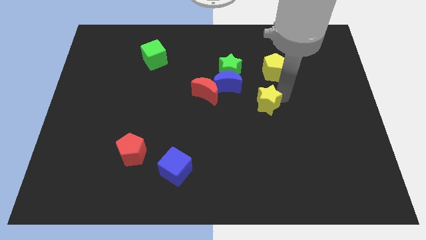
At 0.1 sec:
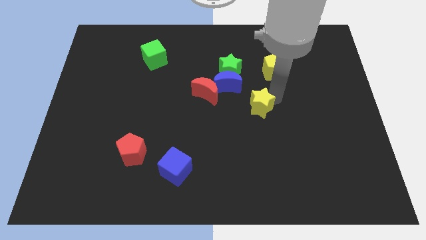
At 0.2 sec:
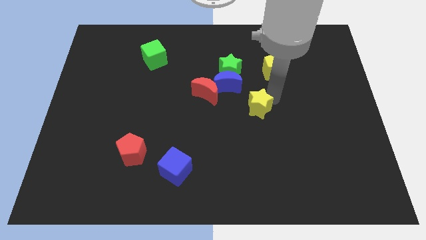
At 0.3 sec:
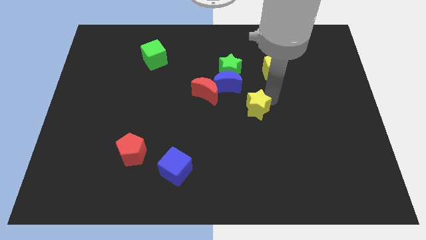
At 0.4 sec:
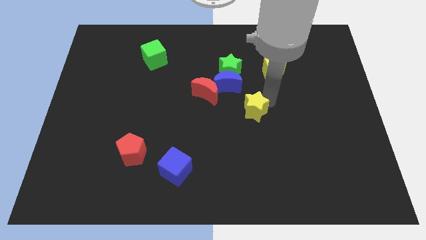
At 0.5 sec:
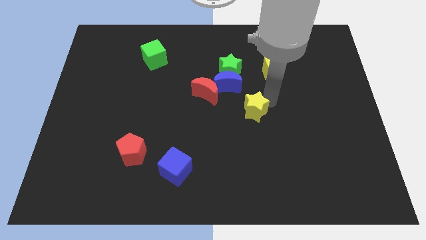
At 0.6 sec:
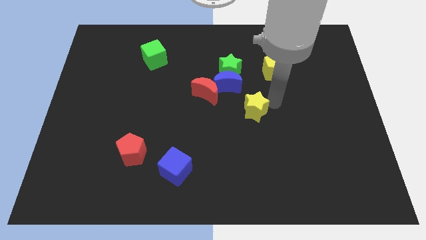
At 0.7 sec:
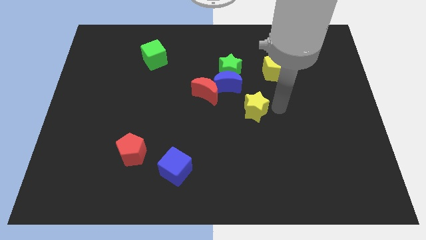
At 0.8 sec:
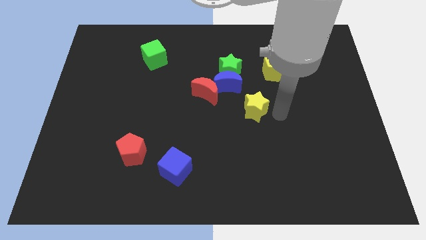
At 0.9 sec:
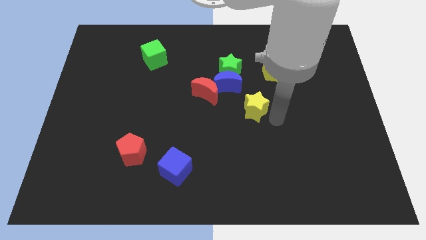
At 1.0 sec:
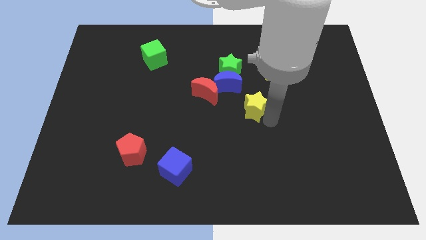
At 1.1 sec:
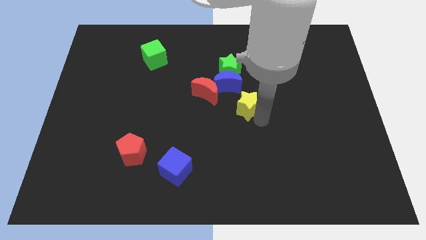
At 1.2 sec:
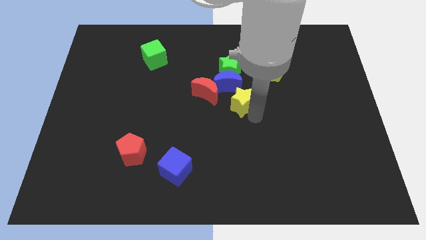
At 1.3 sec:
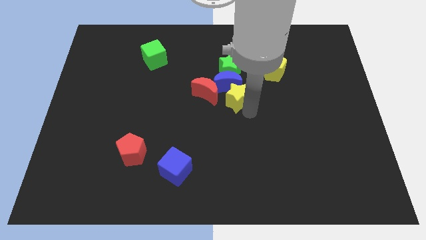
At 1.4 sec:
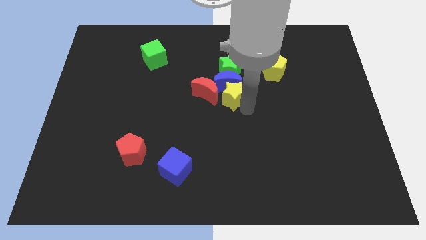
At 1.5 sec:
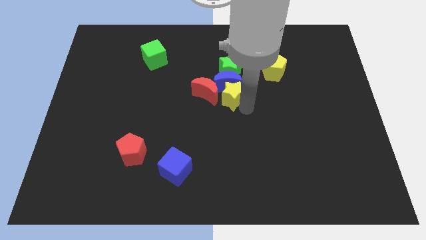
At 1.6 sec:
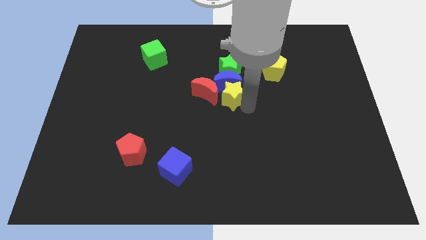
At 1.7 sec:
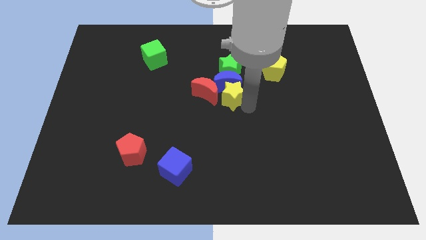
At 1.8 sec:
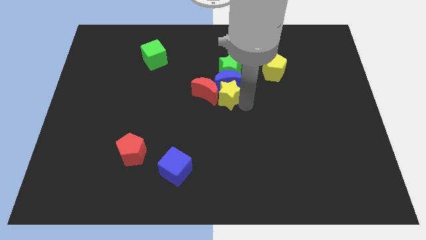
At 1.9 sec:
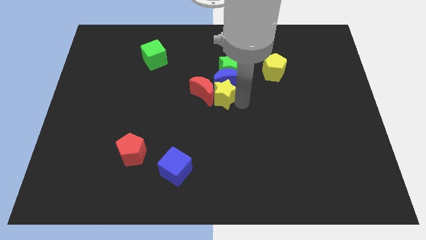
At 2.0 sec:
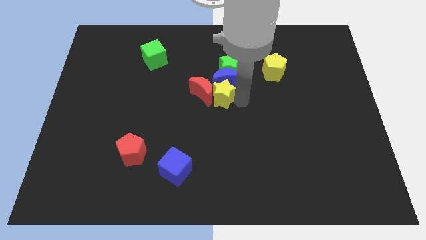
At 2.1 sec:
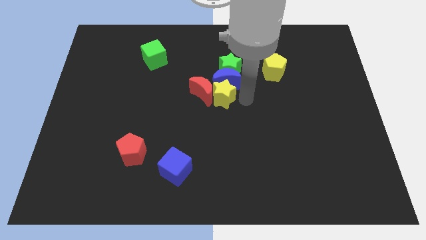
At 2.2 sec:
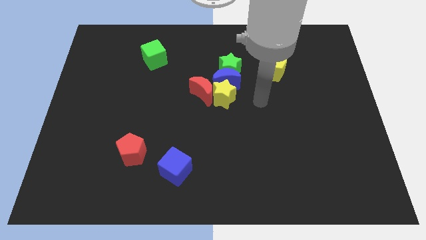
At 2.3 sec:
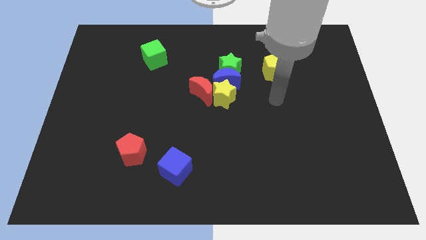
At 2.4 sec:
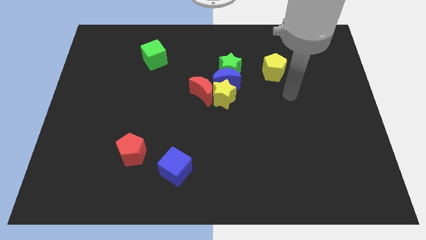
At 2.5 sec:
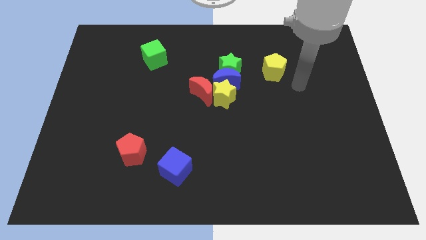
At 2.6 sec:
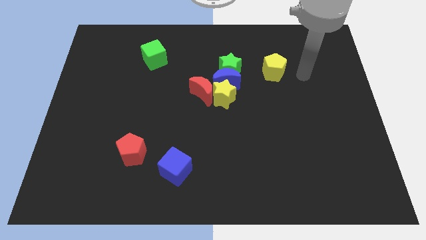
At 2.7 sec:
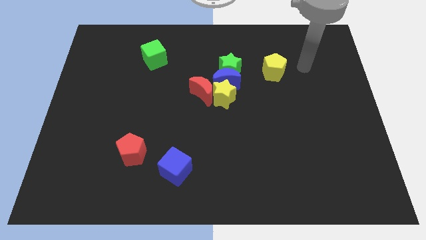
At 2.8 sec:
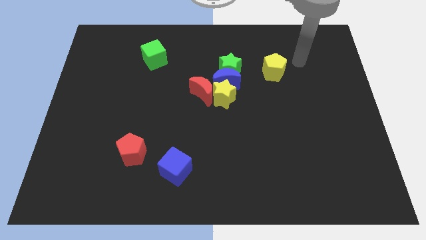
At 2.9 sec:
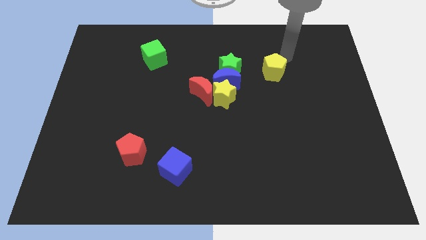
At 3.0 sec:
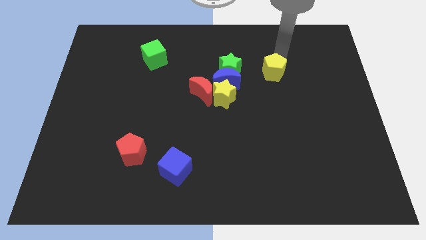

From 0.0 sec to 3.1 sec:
place yellow star at the bottom of the blue moon

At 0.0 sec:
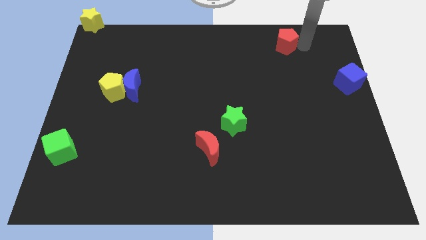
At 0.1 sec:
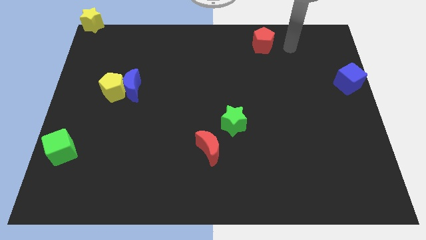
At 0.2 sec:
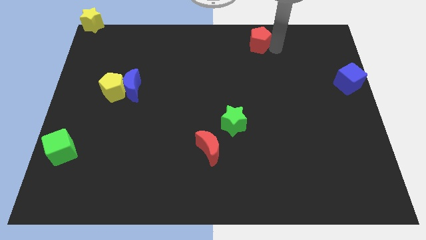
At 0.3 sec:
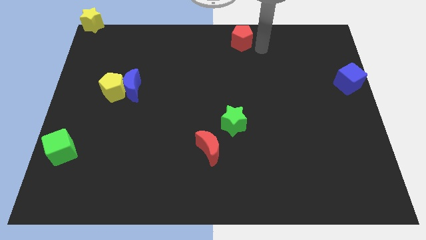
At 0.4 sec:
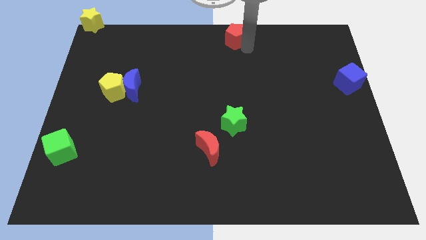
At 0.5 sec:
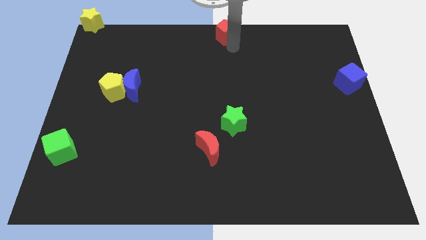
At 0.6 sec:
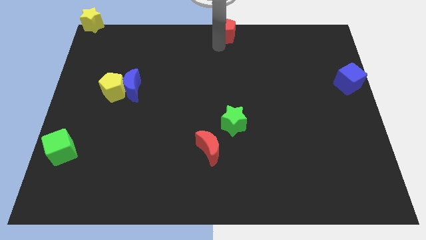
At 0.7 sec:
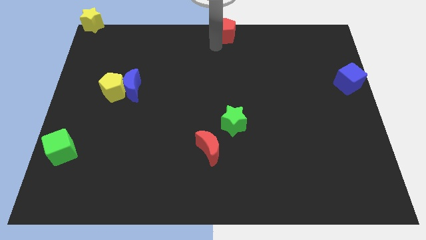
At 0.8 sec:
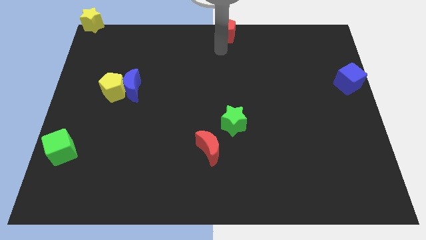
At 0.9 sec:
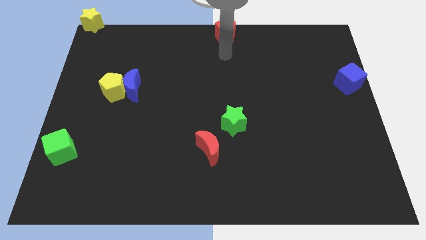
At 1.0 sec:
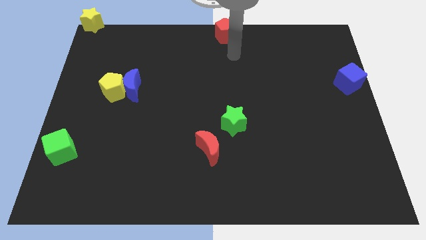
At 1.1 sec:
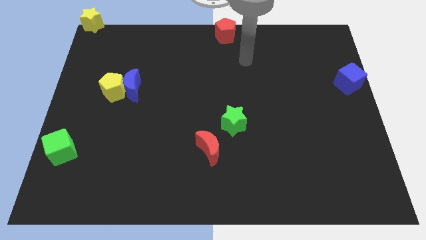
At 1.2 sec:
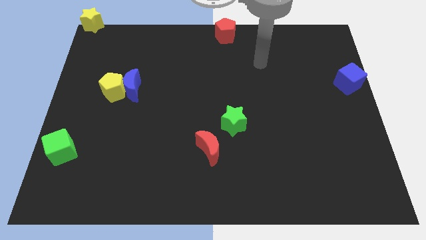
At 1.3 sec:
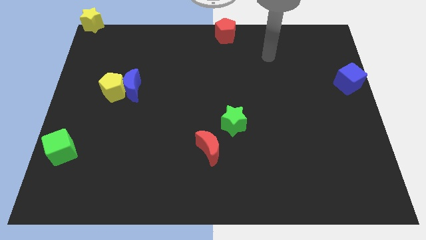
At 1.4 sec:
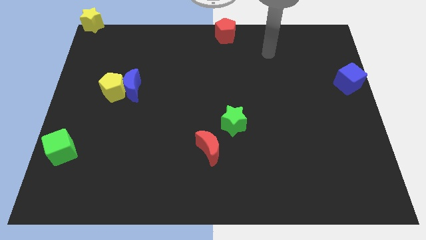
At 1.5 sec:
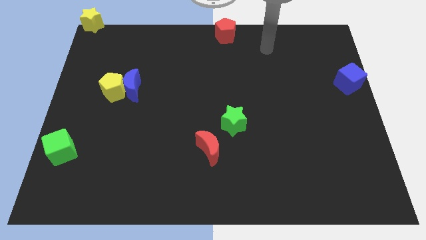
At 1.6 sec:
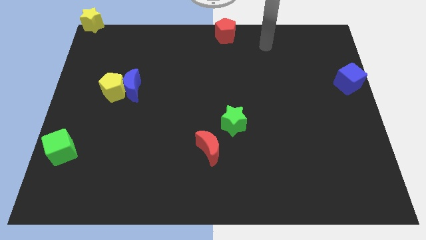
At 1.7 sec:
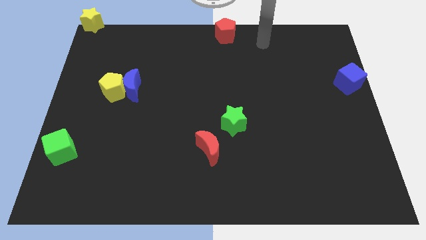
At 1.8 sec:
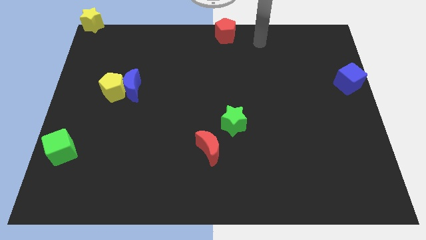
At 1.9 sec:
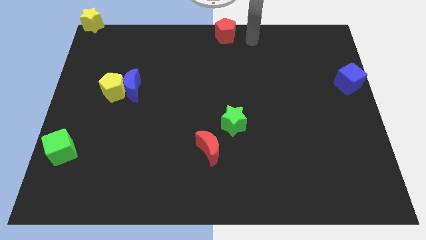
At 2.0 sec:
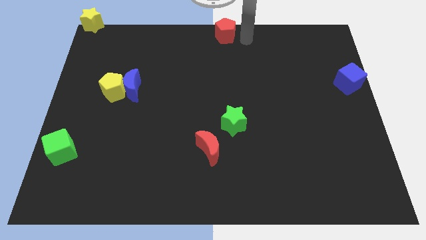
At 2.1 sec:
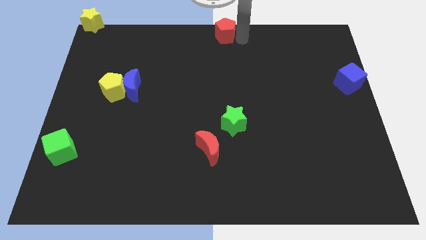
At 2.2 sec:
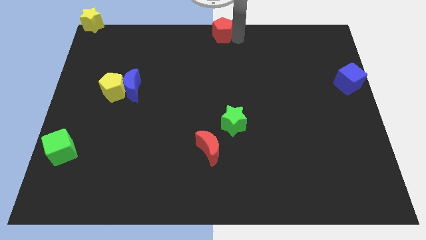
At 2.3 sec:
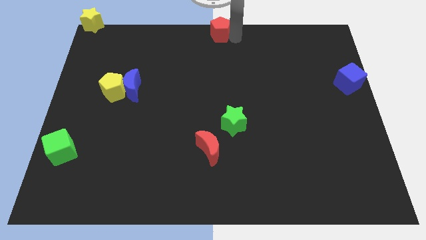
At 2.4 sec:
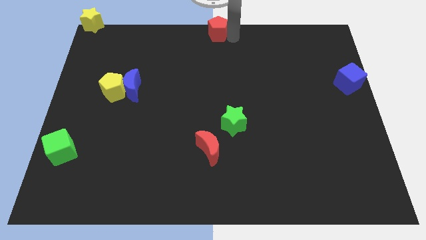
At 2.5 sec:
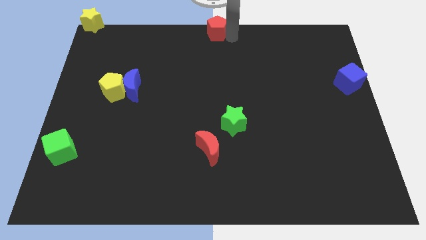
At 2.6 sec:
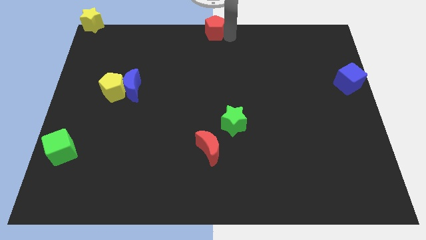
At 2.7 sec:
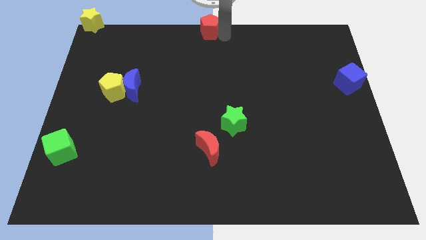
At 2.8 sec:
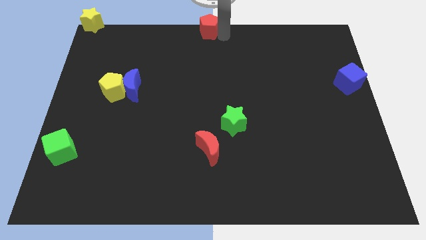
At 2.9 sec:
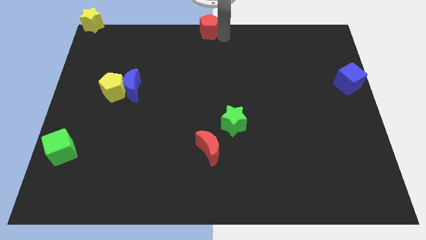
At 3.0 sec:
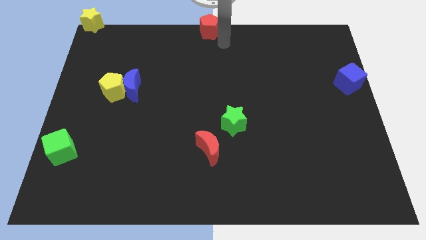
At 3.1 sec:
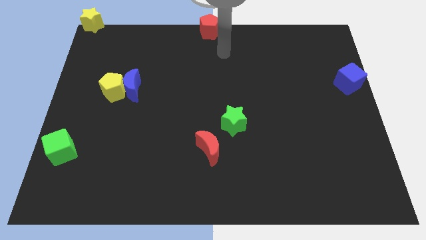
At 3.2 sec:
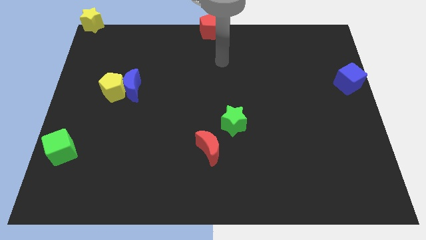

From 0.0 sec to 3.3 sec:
place the red pentagon to the top center of the board

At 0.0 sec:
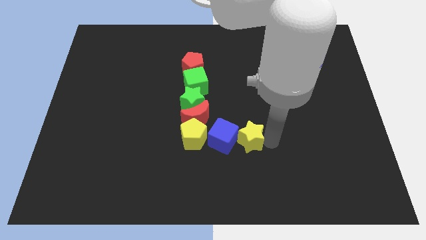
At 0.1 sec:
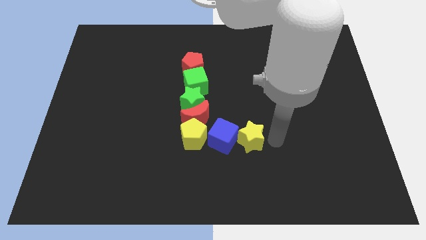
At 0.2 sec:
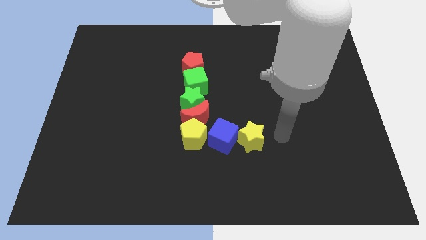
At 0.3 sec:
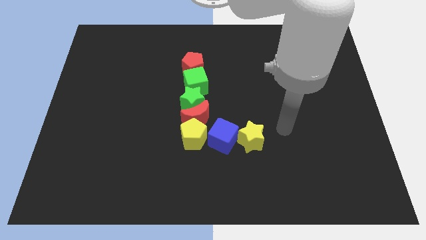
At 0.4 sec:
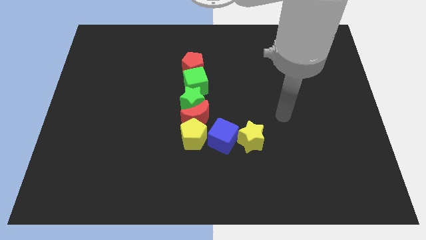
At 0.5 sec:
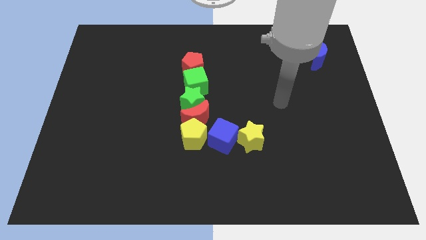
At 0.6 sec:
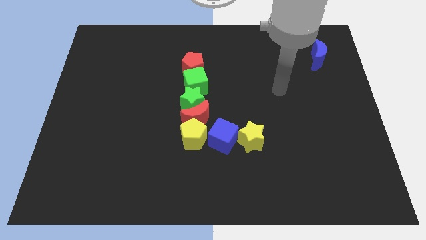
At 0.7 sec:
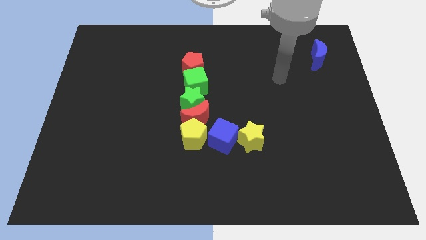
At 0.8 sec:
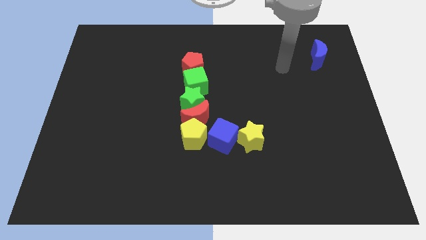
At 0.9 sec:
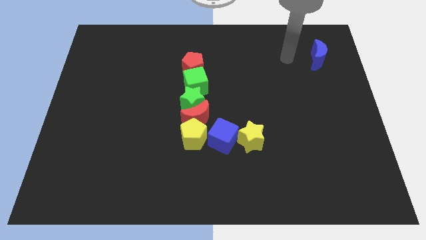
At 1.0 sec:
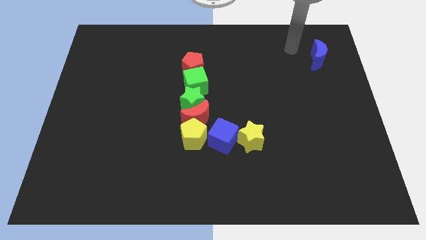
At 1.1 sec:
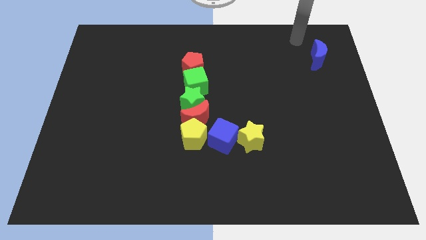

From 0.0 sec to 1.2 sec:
move away from the yellow star

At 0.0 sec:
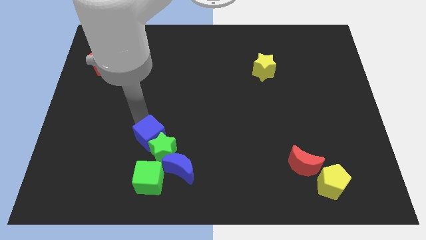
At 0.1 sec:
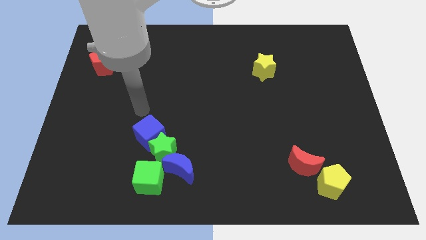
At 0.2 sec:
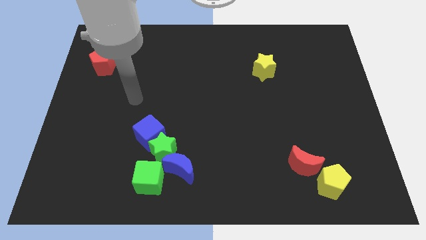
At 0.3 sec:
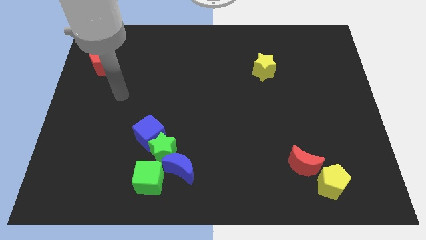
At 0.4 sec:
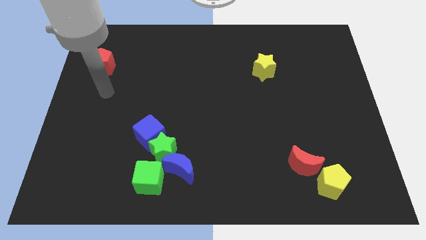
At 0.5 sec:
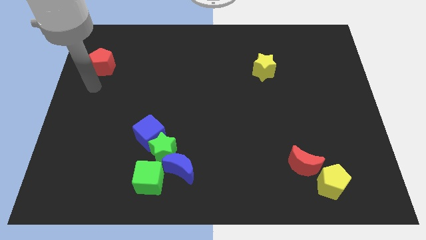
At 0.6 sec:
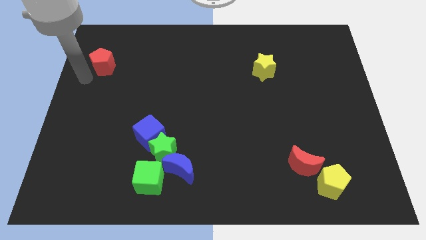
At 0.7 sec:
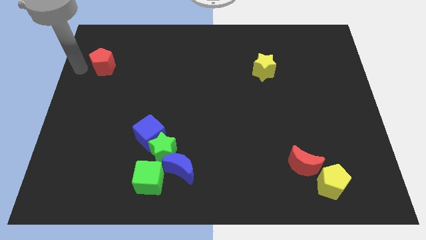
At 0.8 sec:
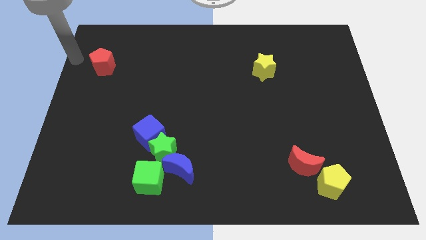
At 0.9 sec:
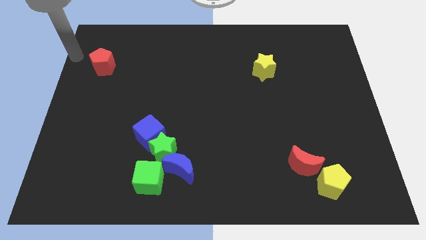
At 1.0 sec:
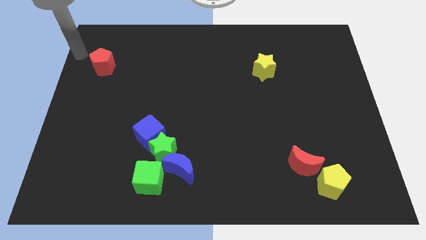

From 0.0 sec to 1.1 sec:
point the arm to the top left of the red pentagon

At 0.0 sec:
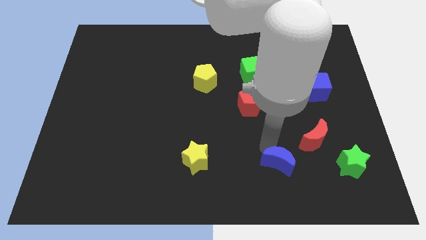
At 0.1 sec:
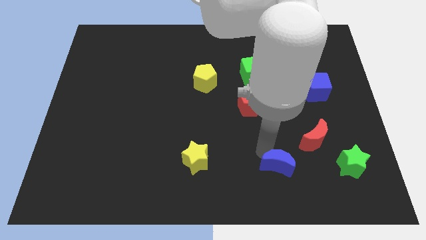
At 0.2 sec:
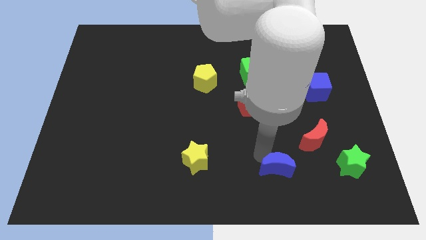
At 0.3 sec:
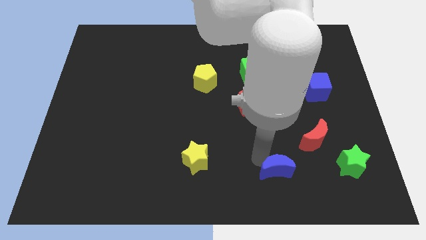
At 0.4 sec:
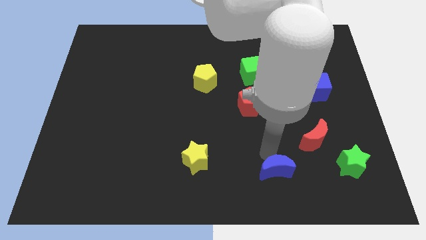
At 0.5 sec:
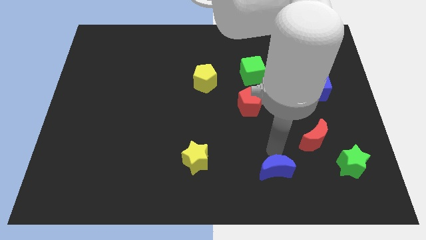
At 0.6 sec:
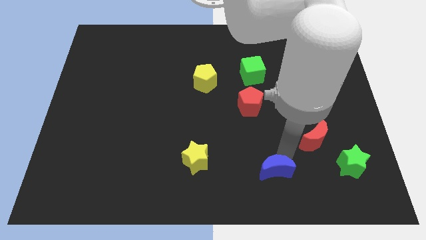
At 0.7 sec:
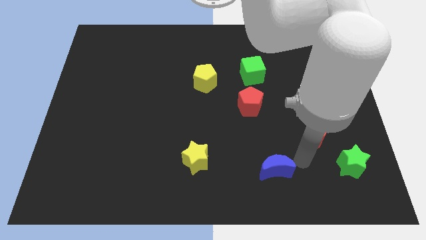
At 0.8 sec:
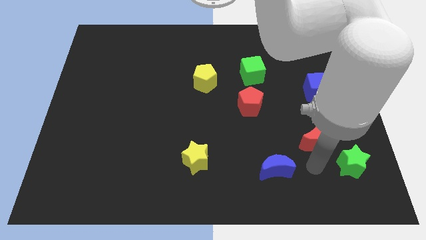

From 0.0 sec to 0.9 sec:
slightly move the blue crescent to the bottom of the board
